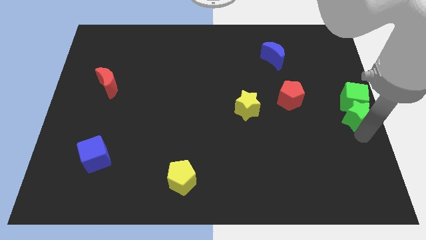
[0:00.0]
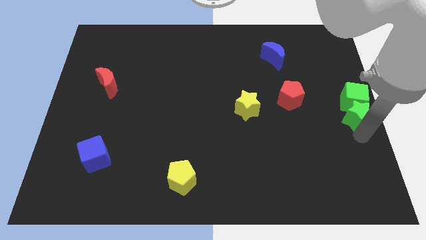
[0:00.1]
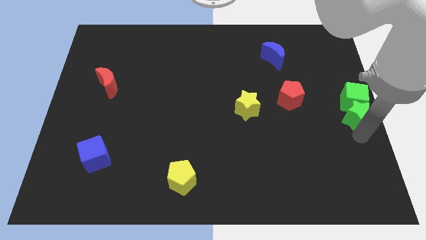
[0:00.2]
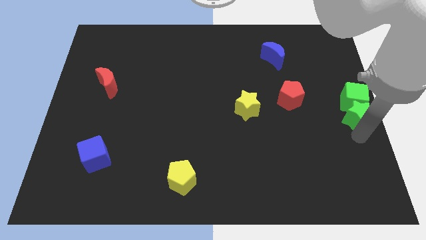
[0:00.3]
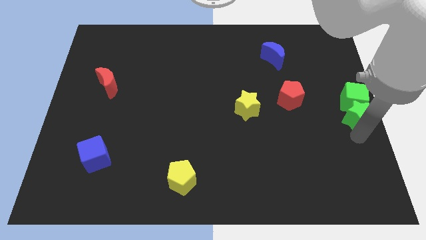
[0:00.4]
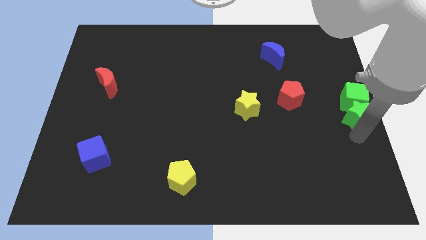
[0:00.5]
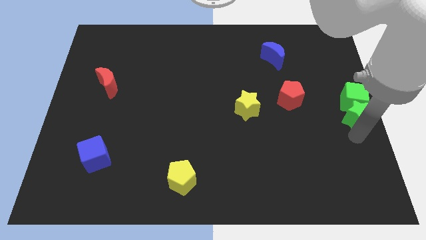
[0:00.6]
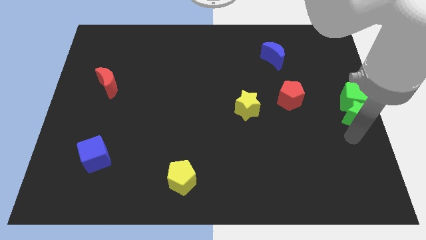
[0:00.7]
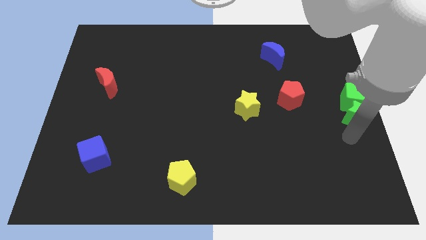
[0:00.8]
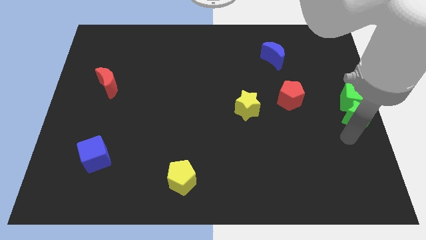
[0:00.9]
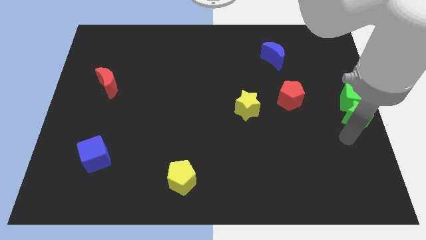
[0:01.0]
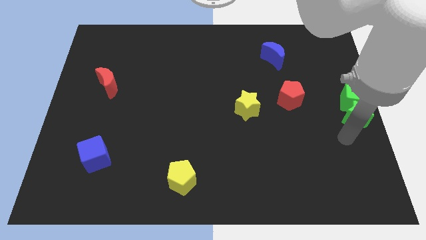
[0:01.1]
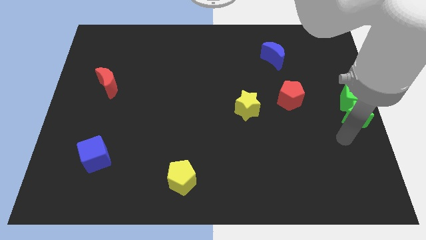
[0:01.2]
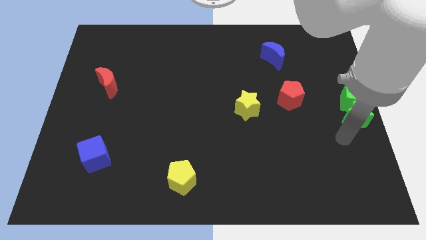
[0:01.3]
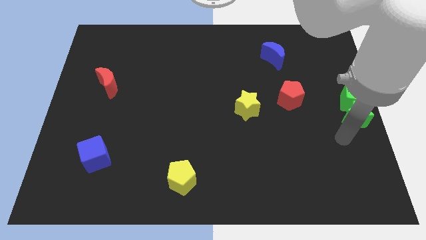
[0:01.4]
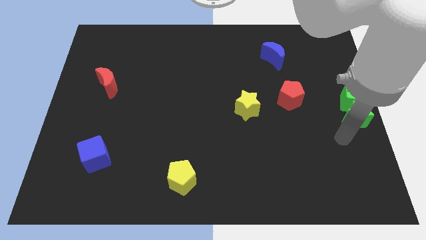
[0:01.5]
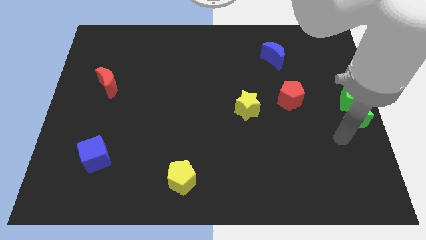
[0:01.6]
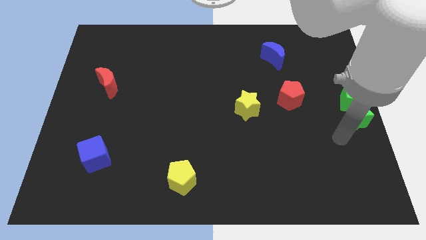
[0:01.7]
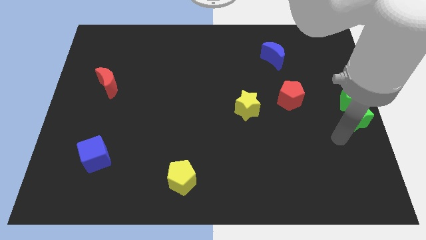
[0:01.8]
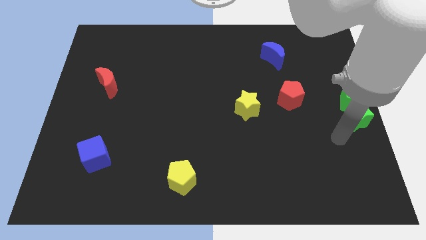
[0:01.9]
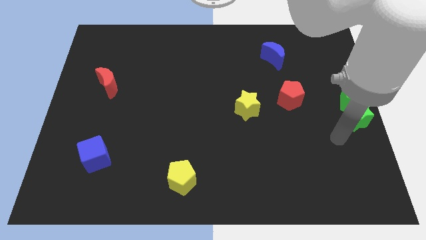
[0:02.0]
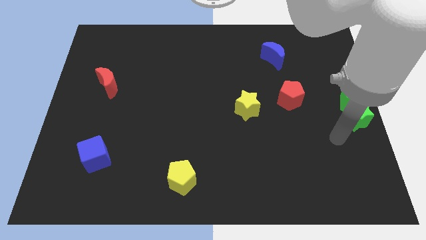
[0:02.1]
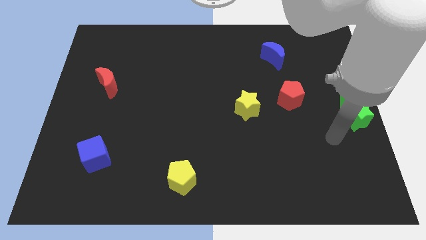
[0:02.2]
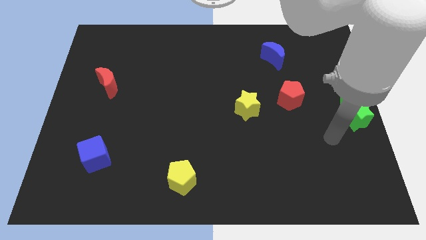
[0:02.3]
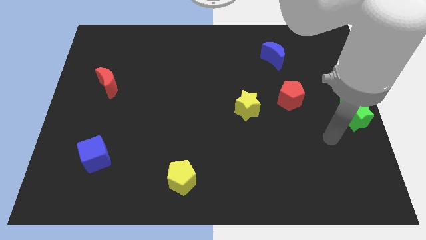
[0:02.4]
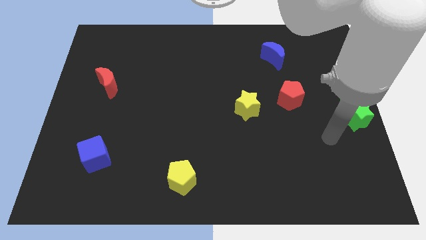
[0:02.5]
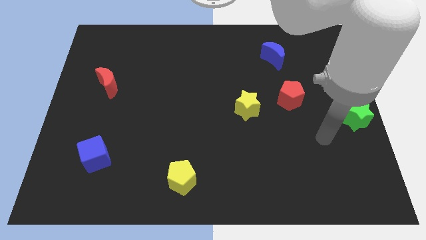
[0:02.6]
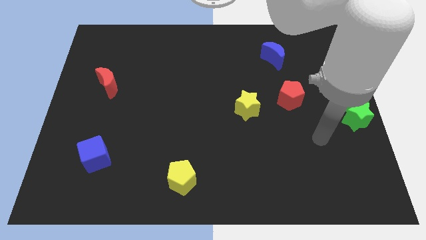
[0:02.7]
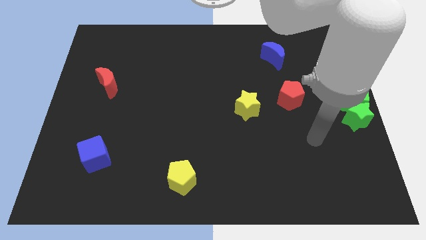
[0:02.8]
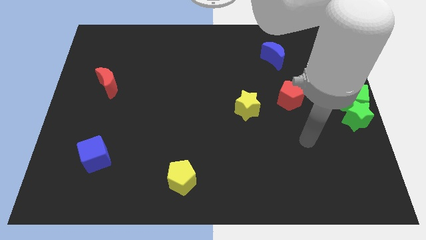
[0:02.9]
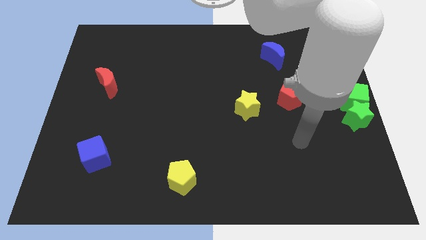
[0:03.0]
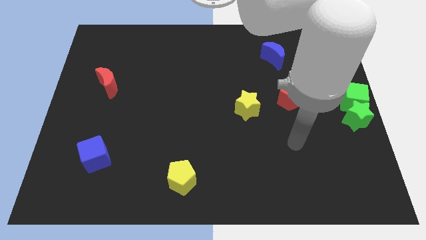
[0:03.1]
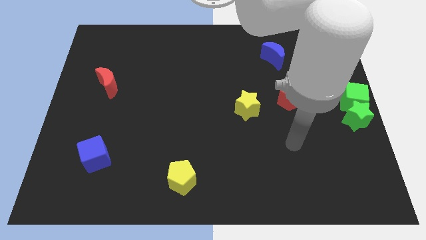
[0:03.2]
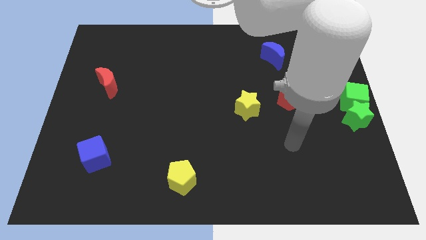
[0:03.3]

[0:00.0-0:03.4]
move your arm towards the left side of the board

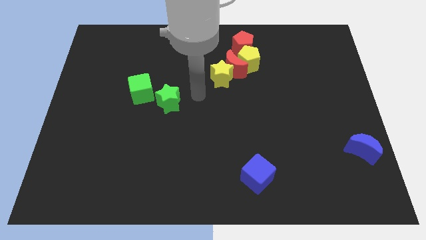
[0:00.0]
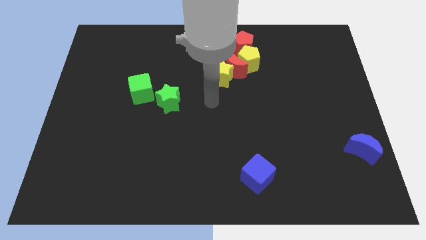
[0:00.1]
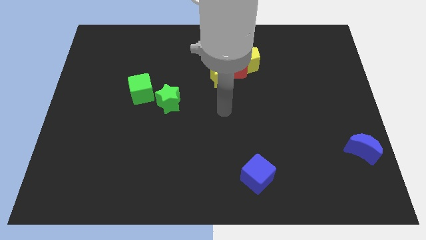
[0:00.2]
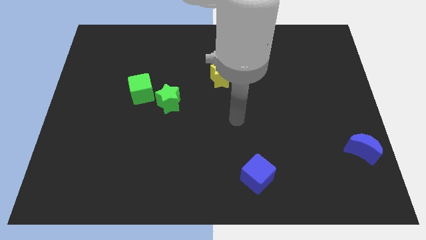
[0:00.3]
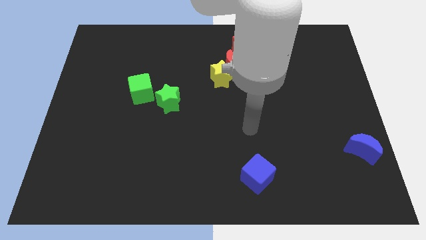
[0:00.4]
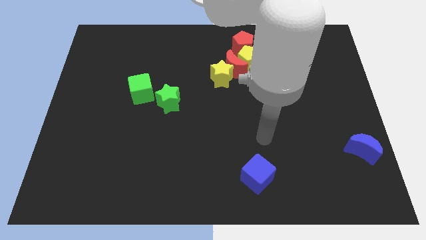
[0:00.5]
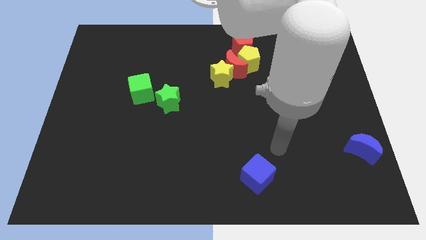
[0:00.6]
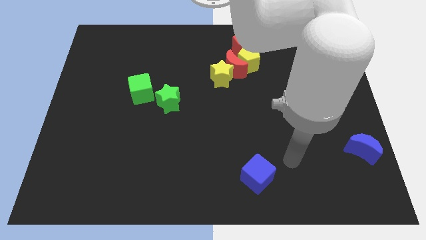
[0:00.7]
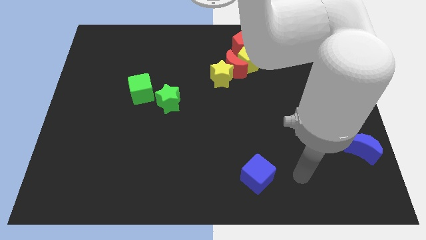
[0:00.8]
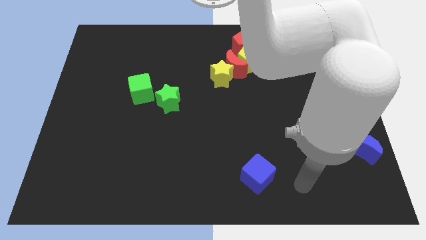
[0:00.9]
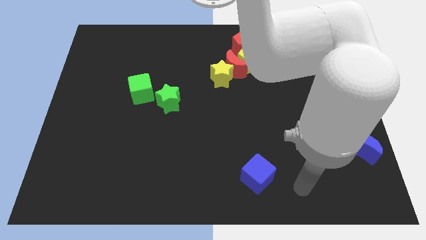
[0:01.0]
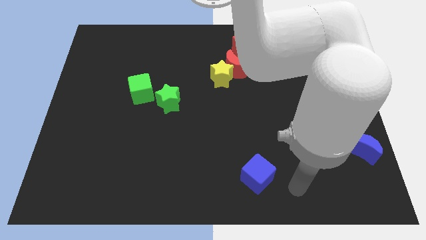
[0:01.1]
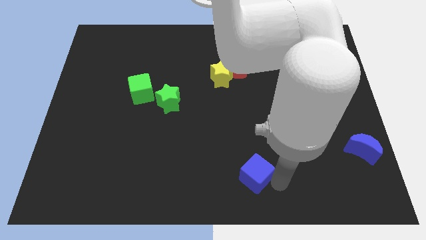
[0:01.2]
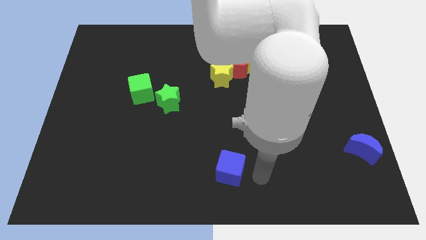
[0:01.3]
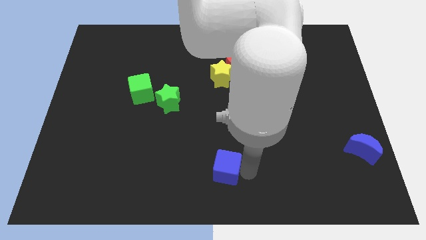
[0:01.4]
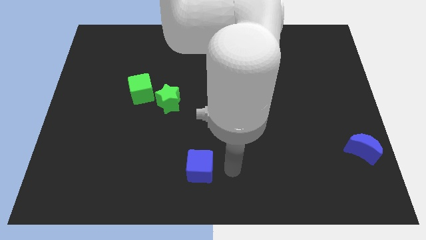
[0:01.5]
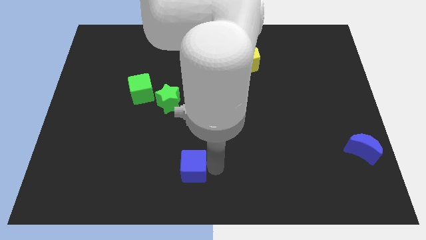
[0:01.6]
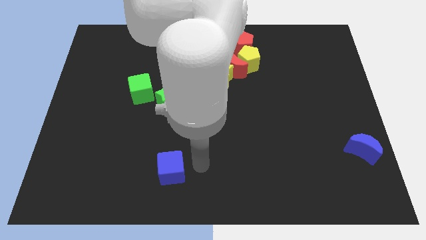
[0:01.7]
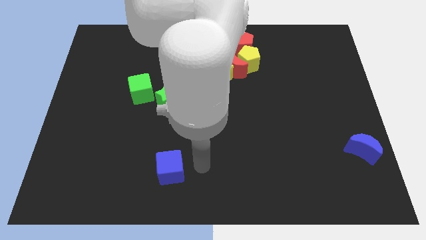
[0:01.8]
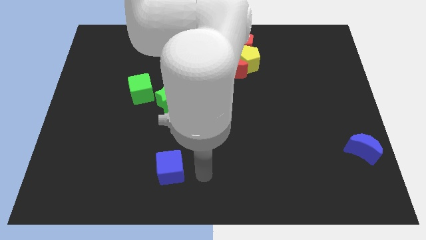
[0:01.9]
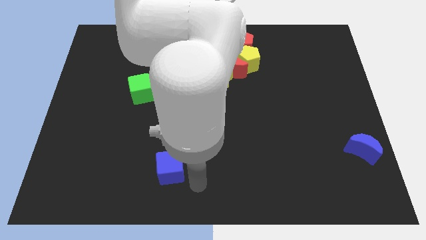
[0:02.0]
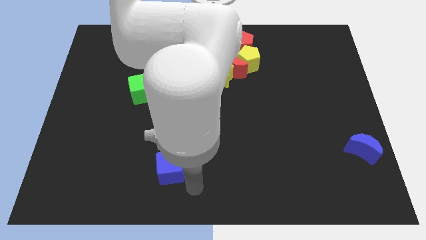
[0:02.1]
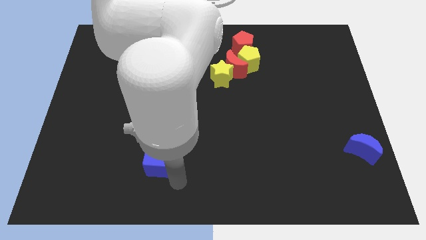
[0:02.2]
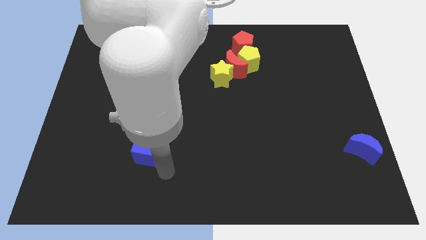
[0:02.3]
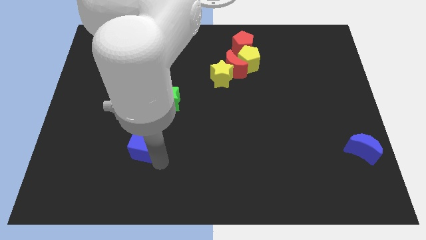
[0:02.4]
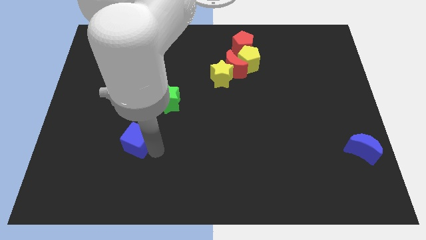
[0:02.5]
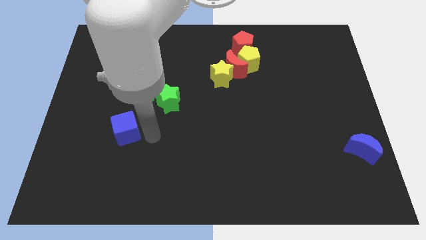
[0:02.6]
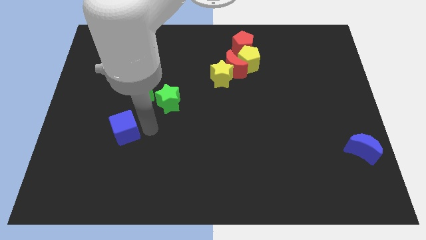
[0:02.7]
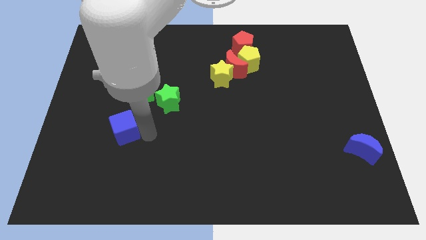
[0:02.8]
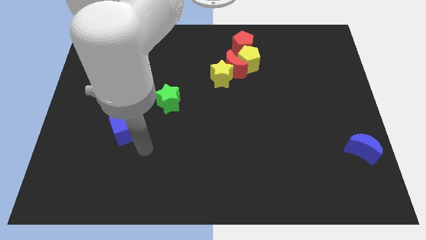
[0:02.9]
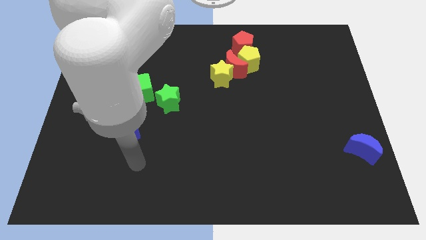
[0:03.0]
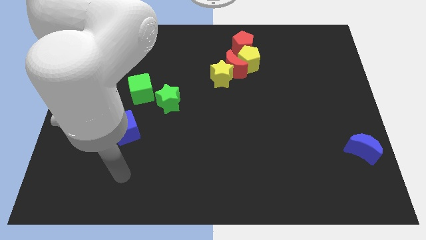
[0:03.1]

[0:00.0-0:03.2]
place the blue cube diagonally bottom left green star

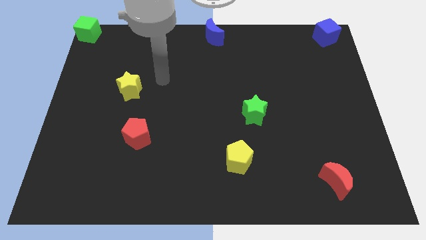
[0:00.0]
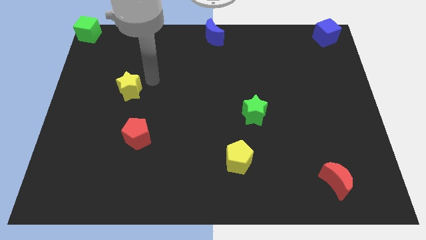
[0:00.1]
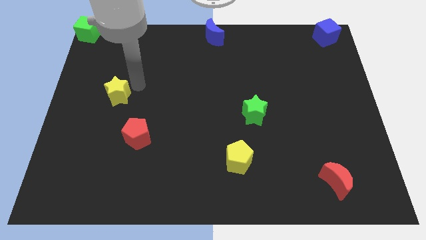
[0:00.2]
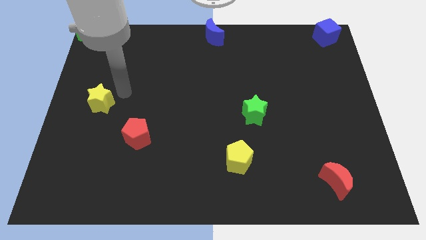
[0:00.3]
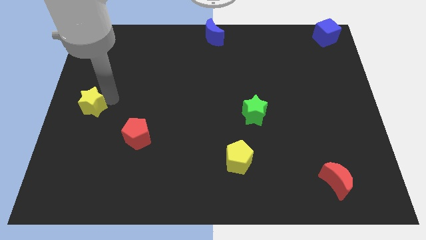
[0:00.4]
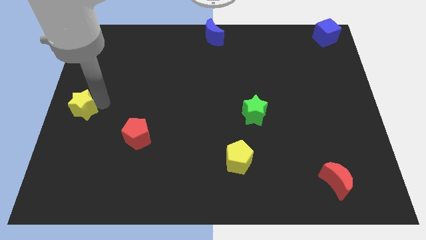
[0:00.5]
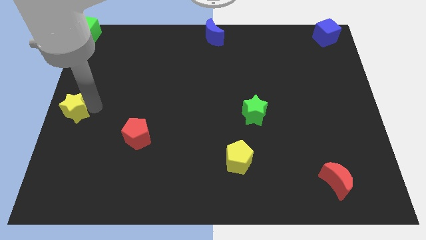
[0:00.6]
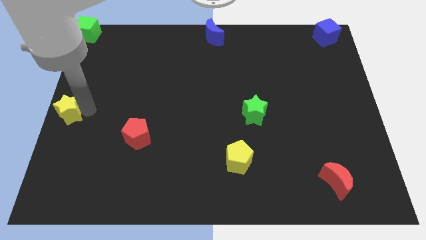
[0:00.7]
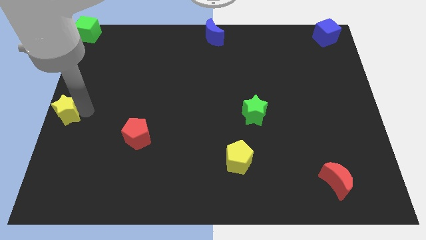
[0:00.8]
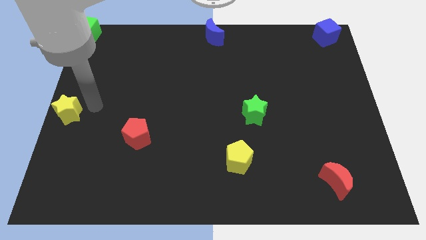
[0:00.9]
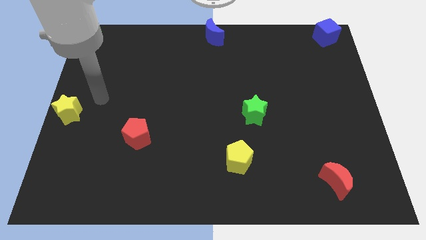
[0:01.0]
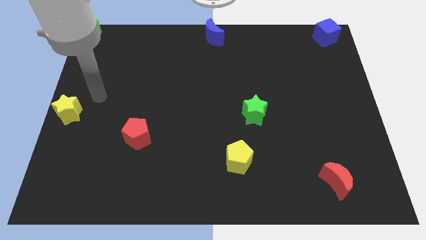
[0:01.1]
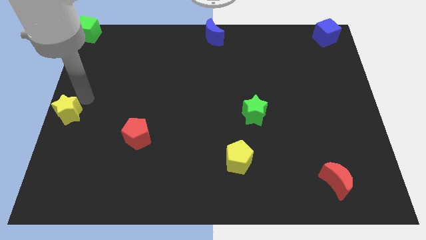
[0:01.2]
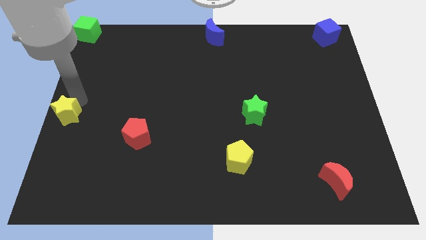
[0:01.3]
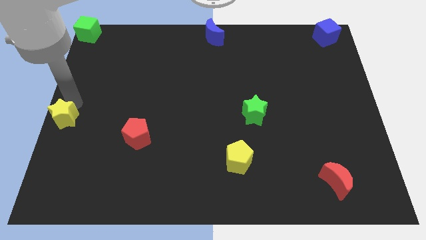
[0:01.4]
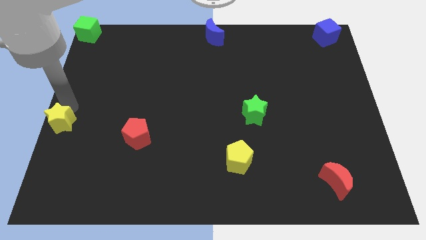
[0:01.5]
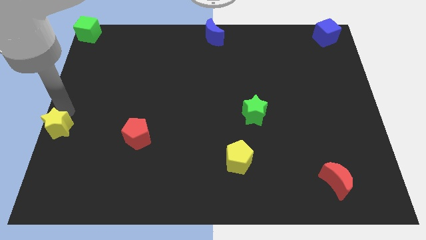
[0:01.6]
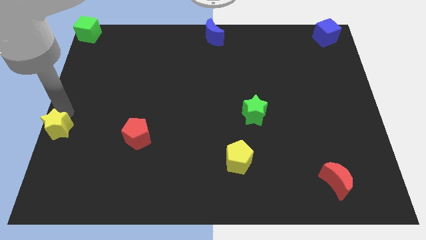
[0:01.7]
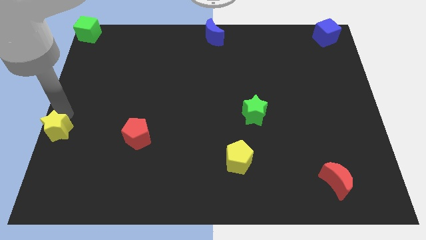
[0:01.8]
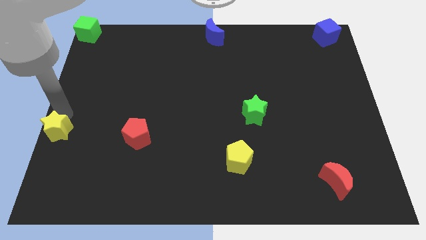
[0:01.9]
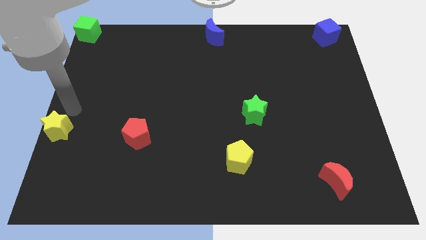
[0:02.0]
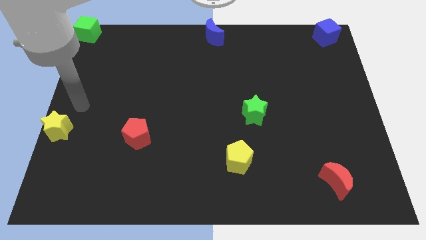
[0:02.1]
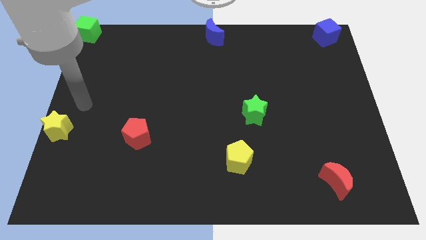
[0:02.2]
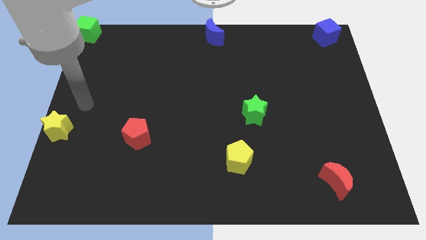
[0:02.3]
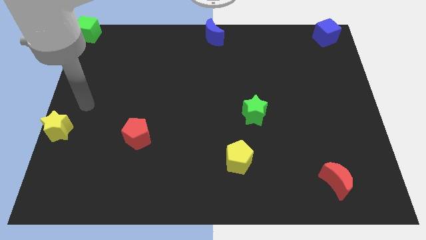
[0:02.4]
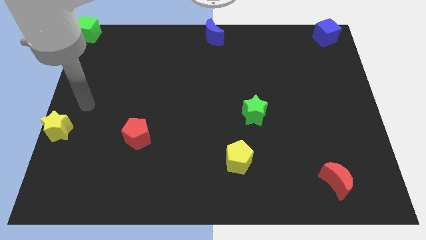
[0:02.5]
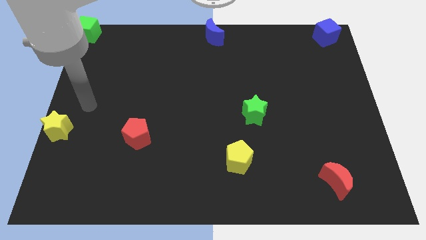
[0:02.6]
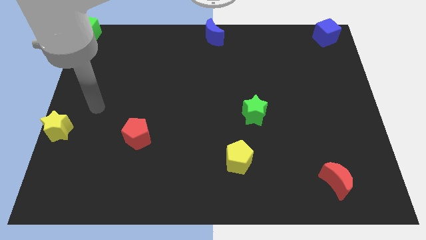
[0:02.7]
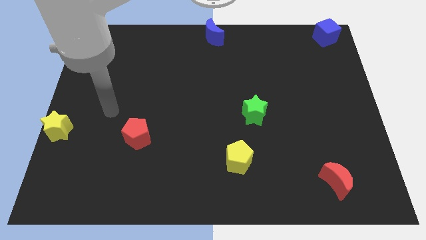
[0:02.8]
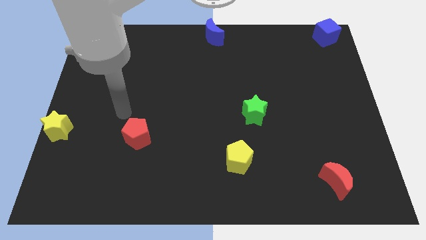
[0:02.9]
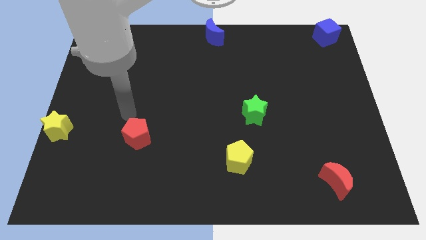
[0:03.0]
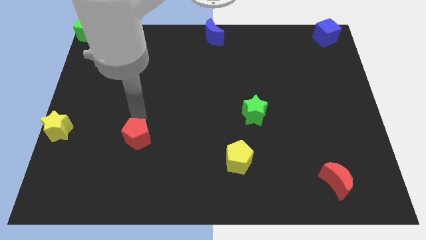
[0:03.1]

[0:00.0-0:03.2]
point your arm above the red pentagon
